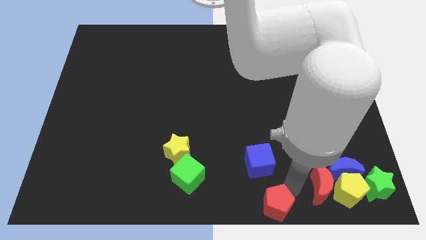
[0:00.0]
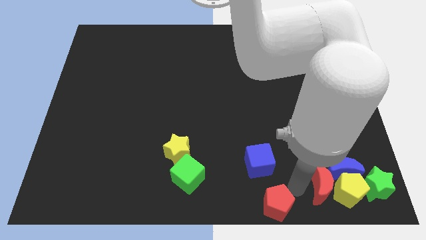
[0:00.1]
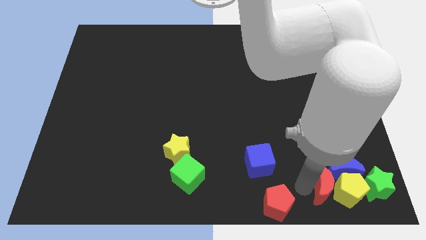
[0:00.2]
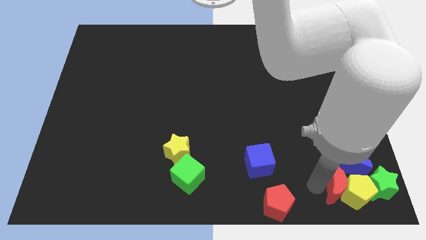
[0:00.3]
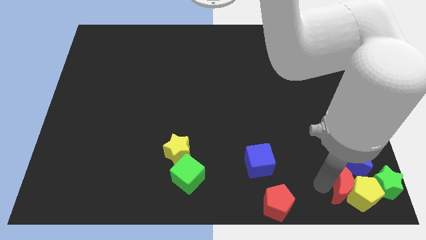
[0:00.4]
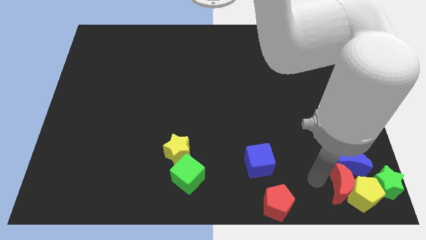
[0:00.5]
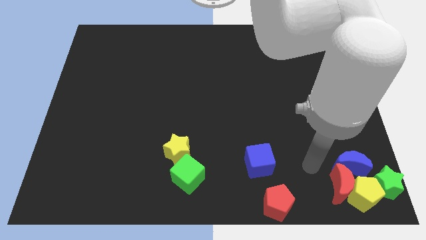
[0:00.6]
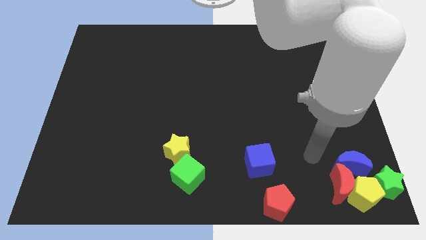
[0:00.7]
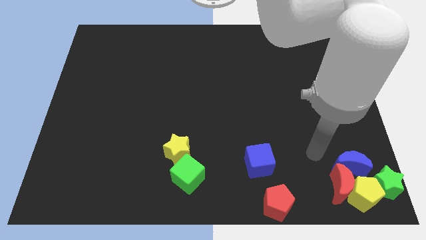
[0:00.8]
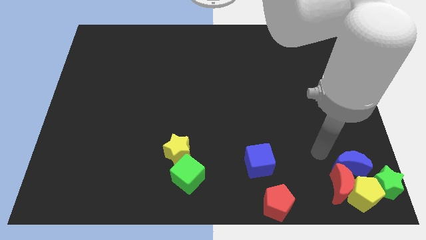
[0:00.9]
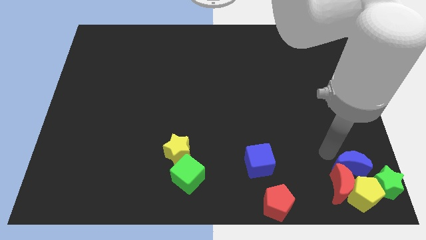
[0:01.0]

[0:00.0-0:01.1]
move the horizontal line of blocks to the bottom right

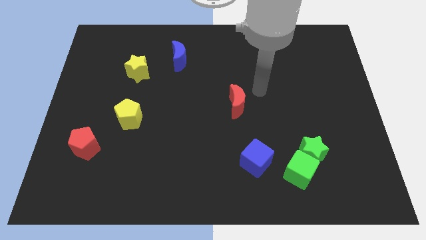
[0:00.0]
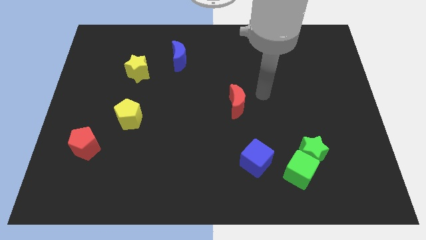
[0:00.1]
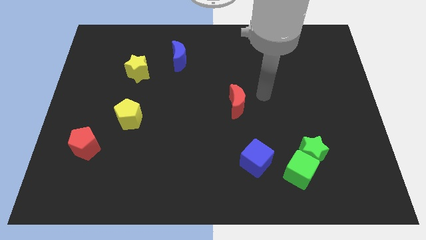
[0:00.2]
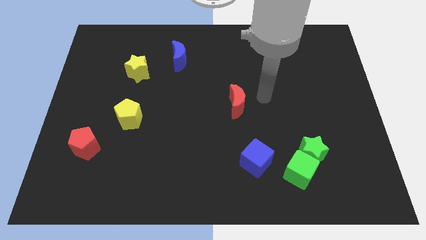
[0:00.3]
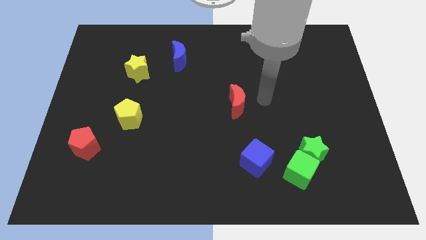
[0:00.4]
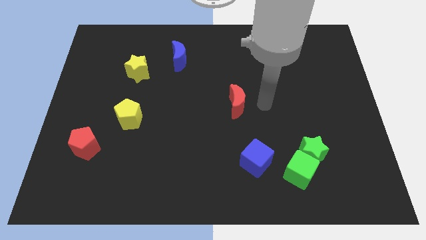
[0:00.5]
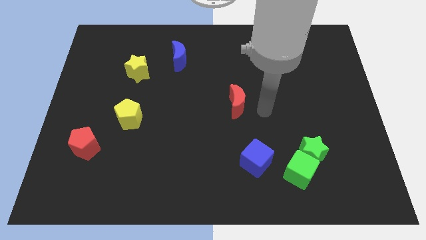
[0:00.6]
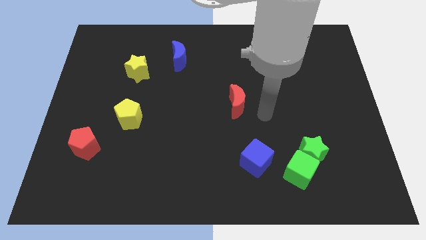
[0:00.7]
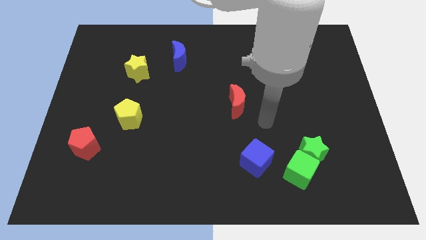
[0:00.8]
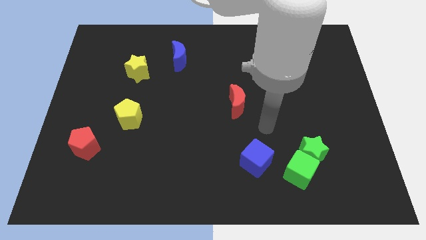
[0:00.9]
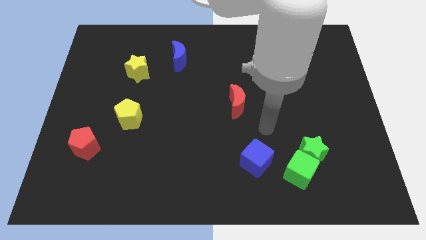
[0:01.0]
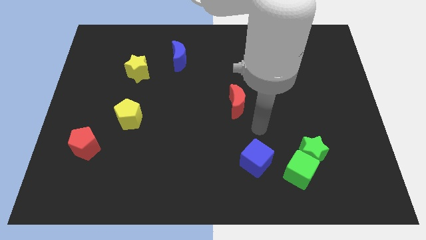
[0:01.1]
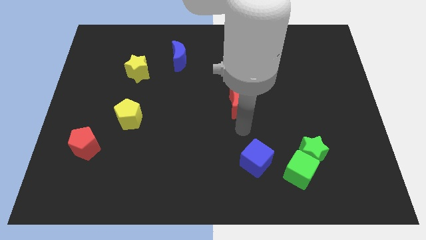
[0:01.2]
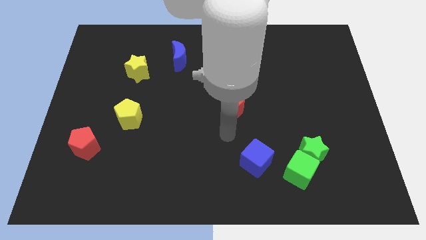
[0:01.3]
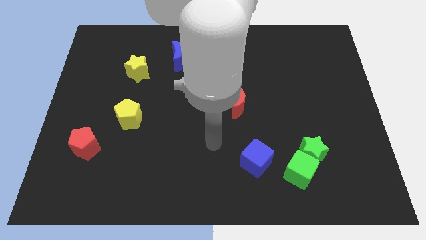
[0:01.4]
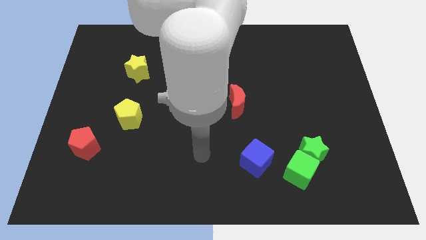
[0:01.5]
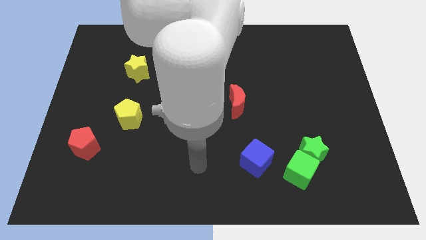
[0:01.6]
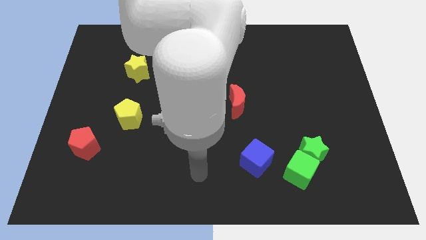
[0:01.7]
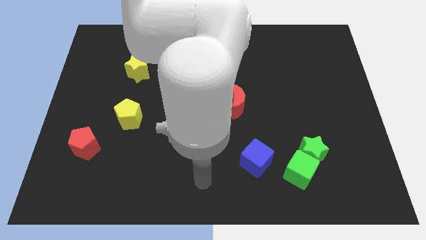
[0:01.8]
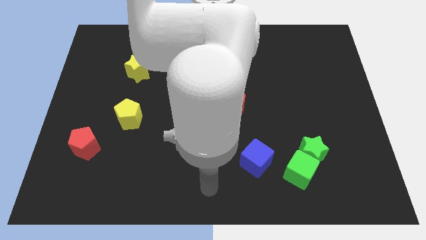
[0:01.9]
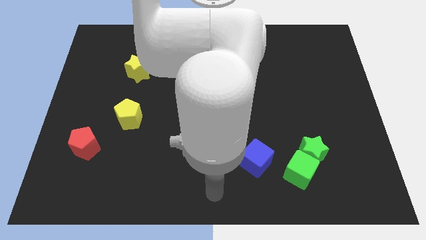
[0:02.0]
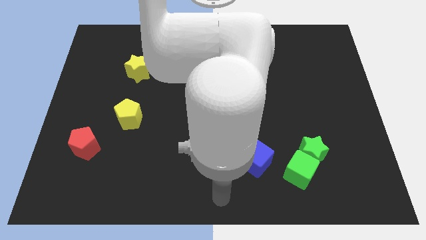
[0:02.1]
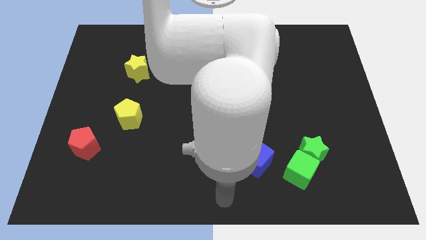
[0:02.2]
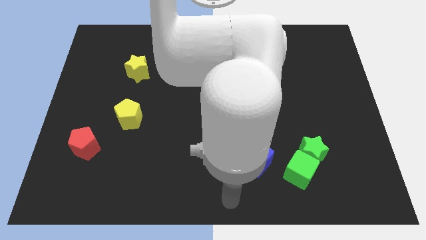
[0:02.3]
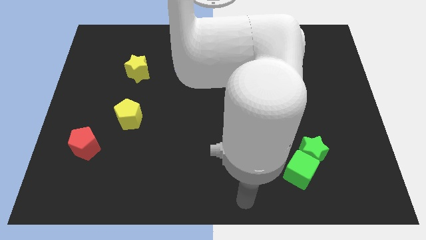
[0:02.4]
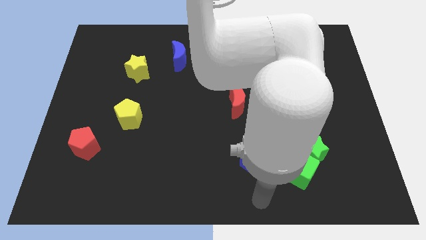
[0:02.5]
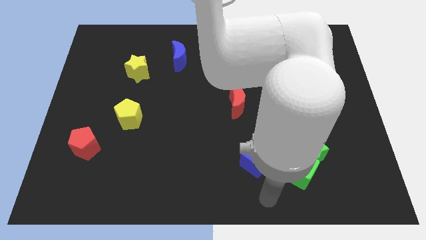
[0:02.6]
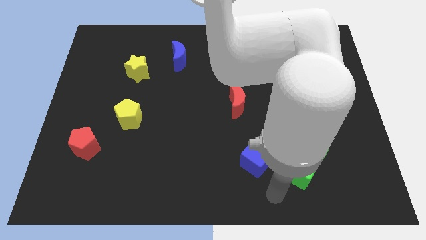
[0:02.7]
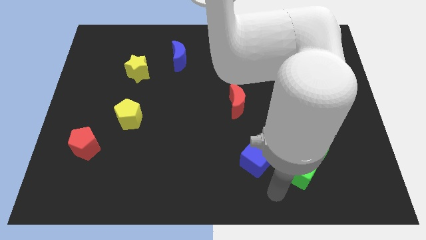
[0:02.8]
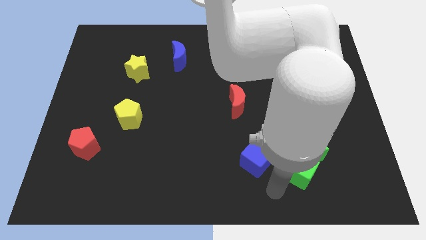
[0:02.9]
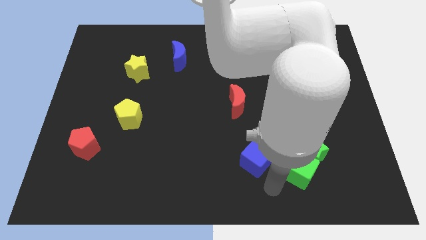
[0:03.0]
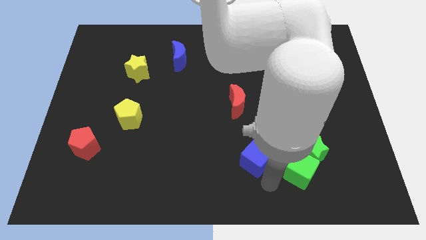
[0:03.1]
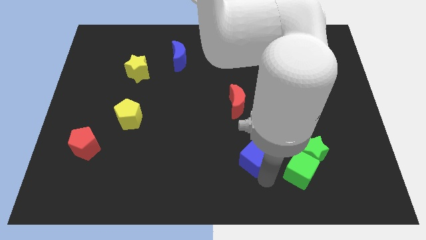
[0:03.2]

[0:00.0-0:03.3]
go near the blue cube

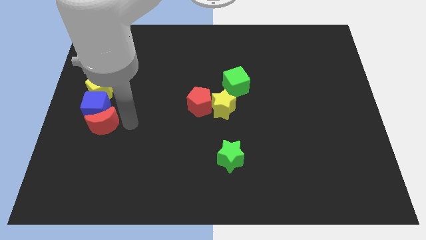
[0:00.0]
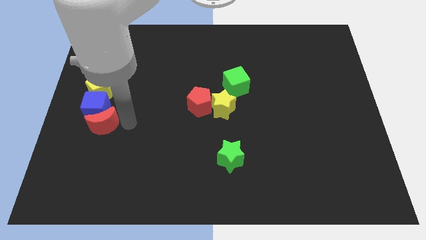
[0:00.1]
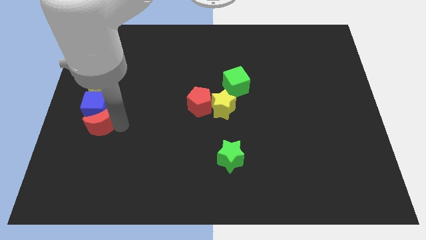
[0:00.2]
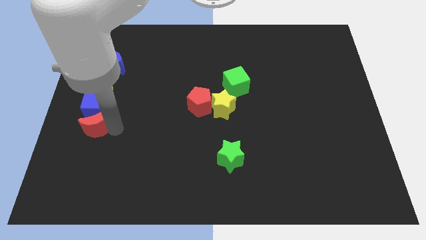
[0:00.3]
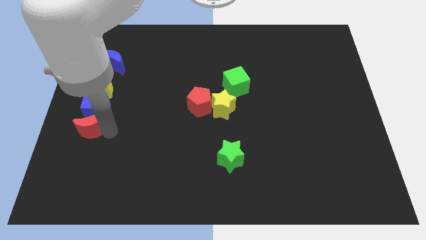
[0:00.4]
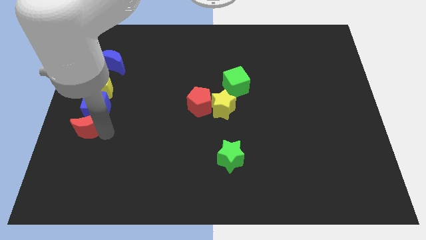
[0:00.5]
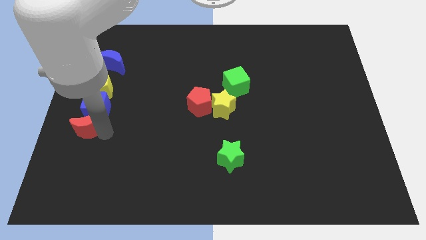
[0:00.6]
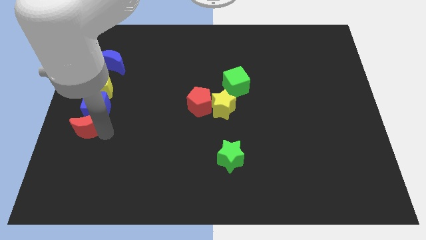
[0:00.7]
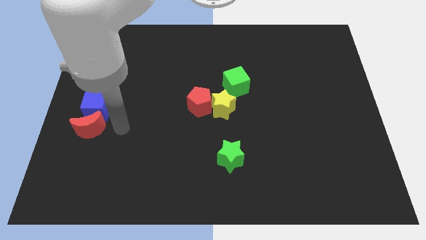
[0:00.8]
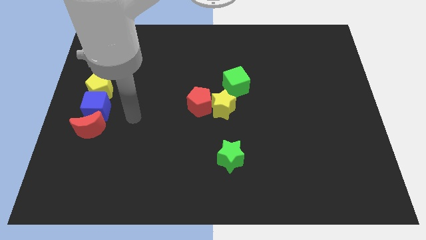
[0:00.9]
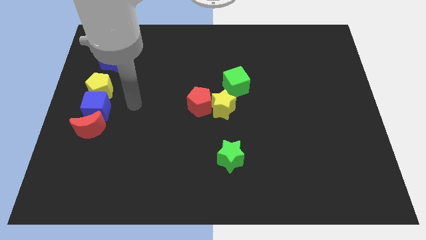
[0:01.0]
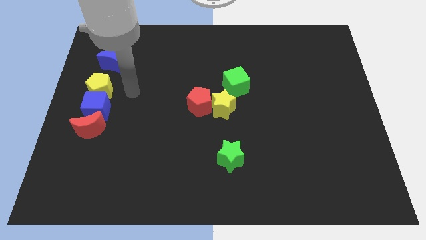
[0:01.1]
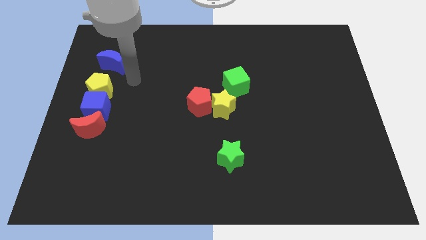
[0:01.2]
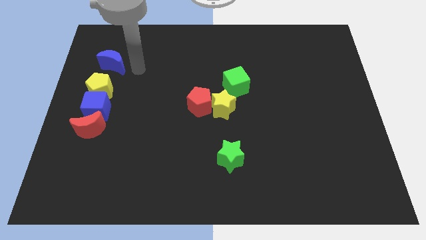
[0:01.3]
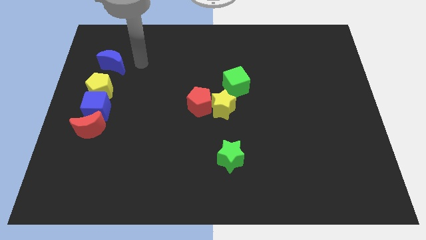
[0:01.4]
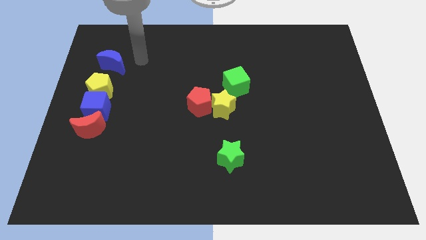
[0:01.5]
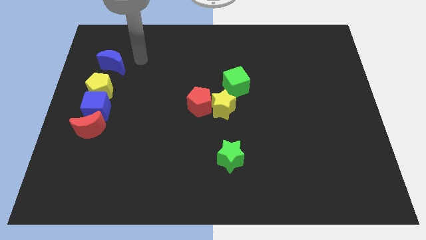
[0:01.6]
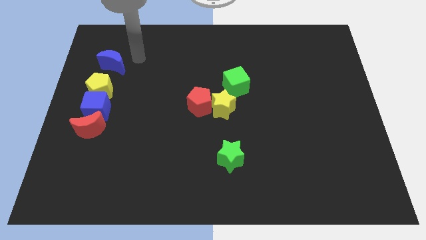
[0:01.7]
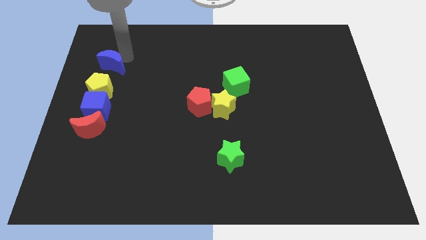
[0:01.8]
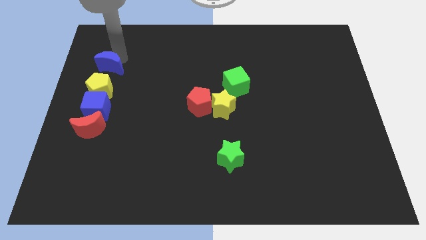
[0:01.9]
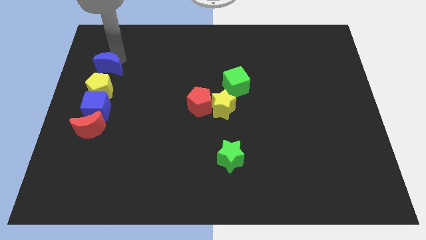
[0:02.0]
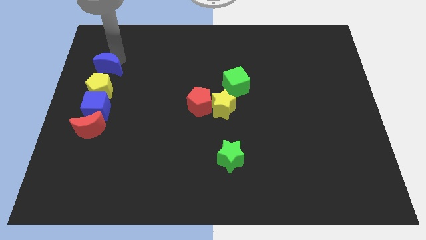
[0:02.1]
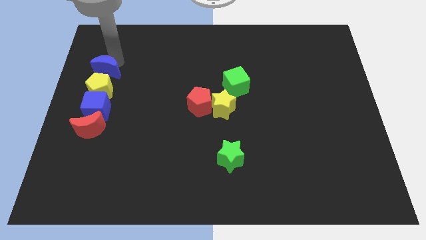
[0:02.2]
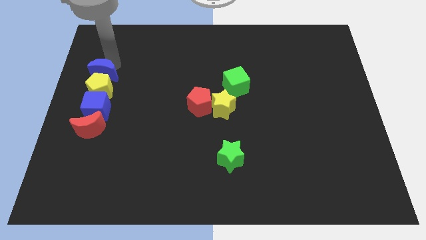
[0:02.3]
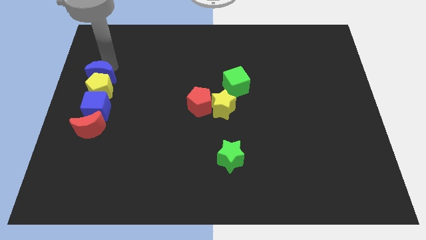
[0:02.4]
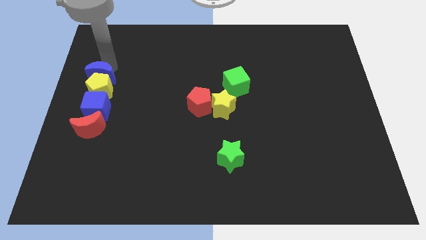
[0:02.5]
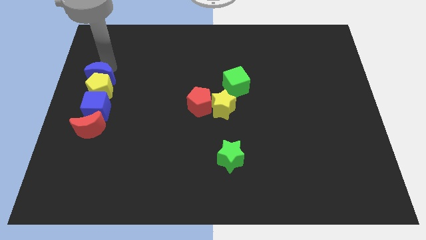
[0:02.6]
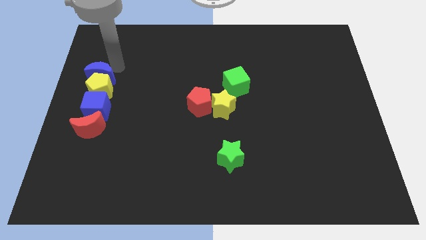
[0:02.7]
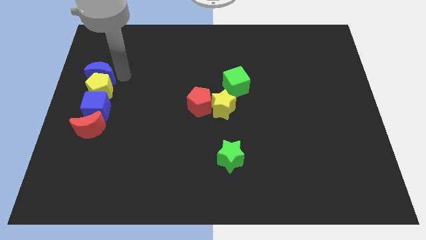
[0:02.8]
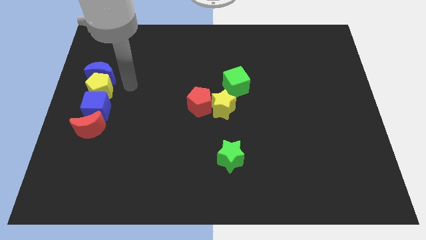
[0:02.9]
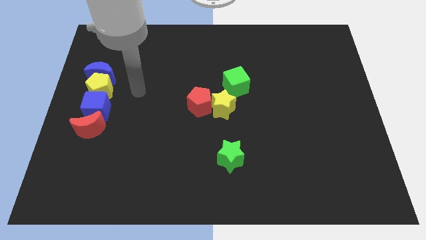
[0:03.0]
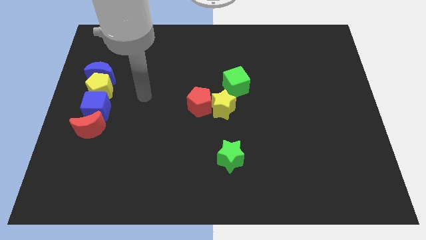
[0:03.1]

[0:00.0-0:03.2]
push the blue moon to the top of the yellow pentagon

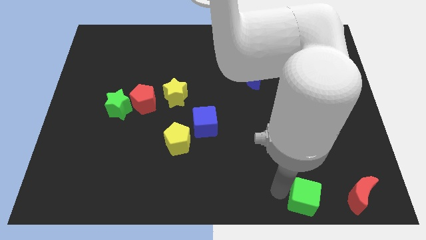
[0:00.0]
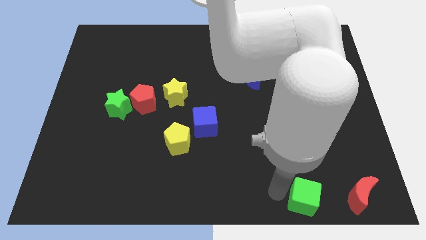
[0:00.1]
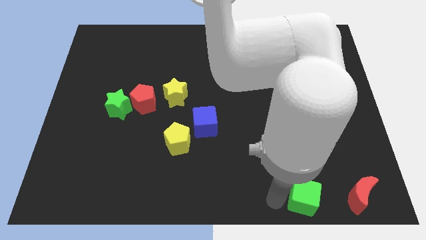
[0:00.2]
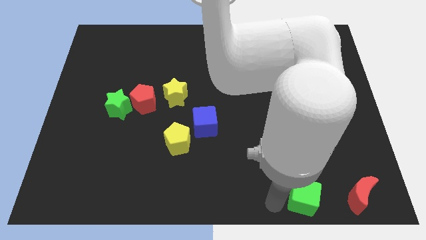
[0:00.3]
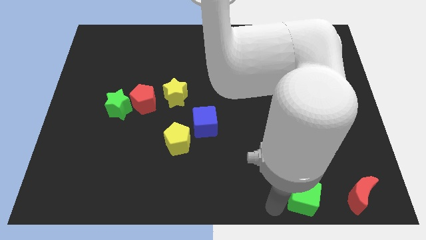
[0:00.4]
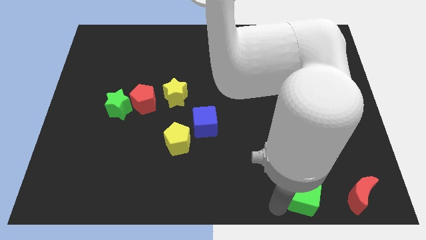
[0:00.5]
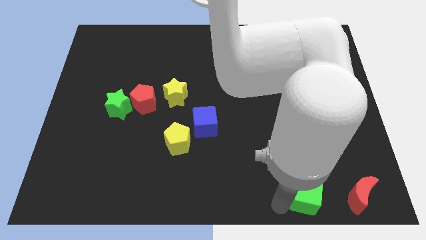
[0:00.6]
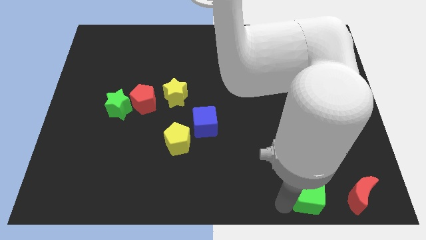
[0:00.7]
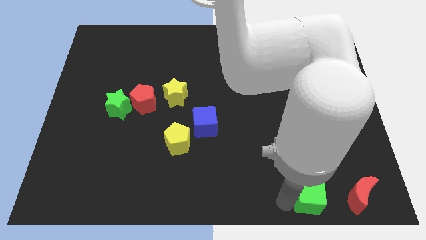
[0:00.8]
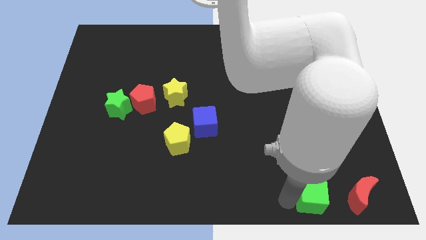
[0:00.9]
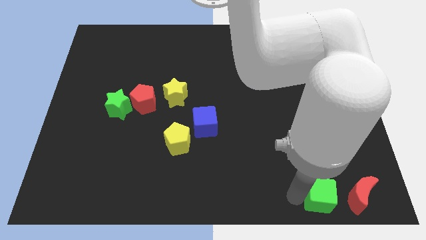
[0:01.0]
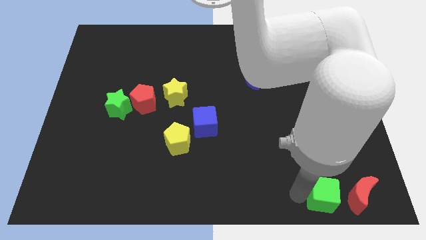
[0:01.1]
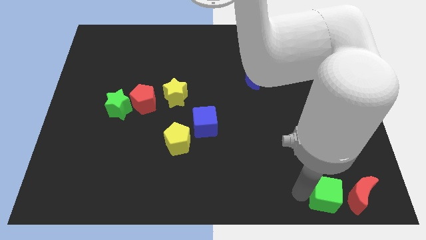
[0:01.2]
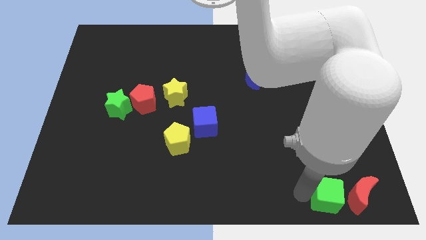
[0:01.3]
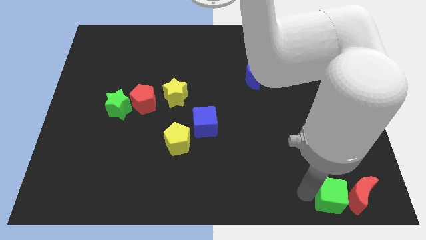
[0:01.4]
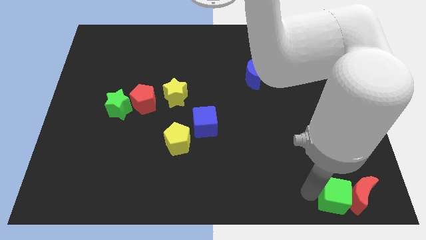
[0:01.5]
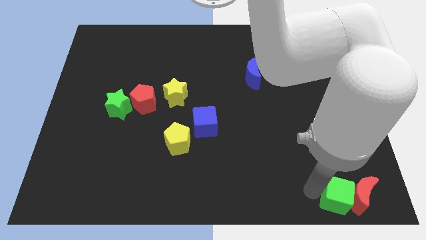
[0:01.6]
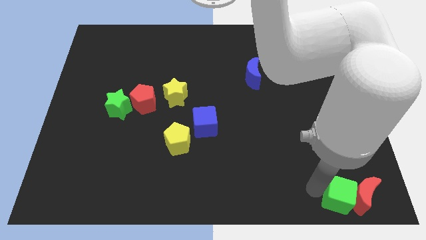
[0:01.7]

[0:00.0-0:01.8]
push the green cube to the left of the red crescent
